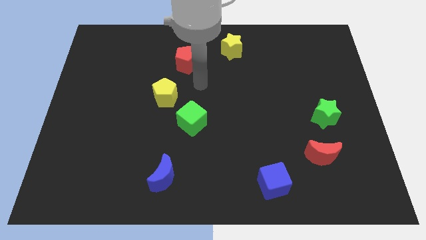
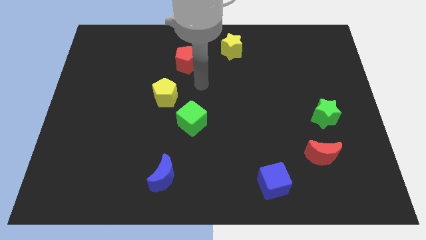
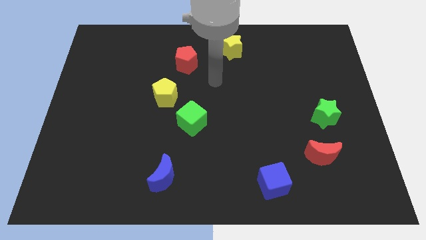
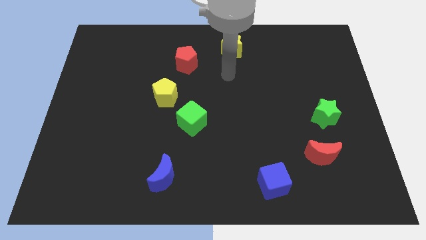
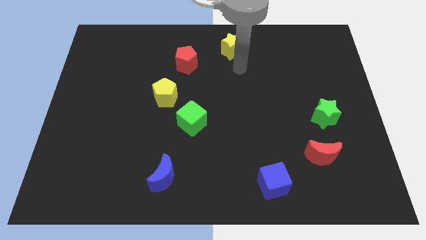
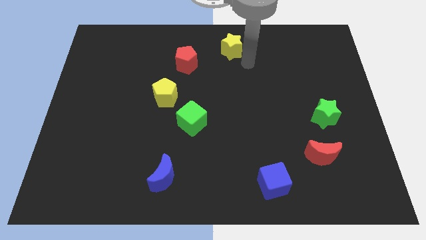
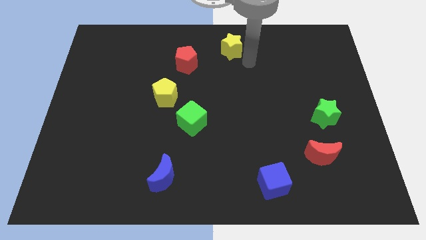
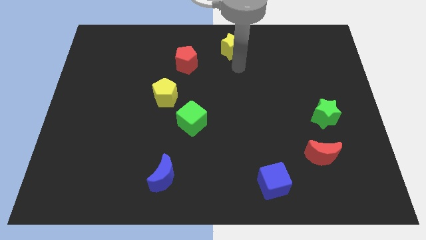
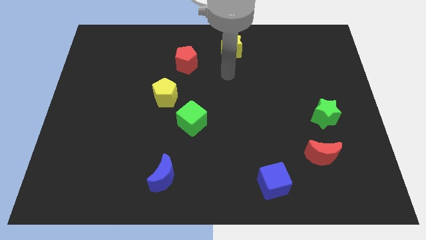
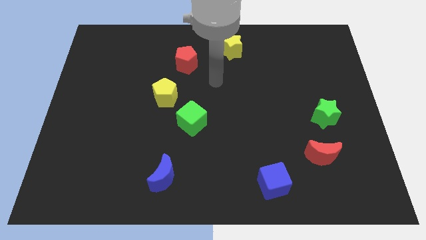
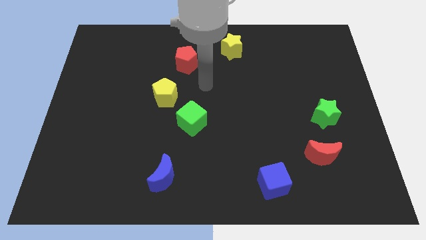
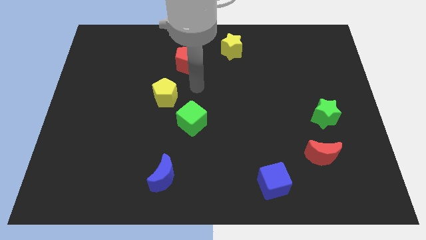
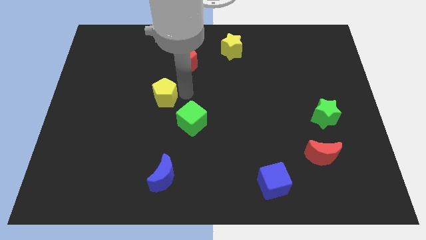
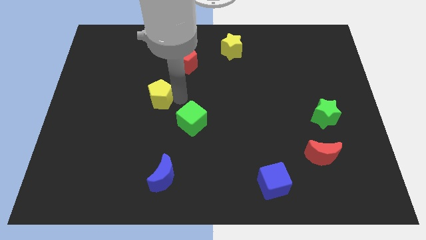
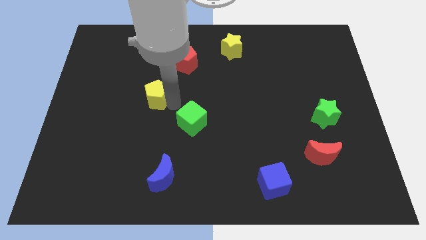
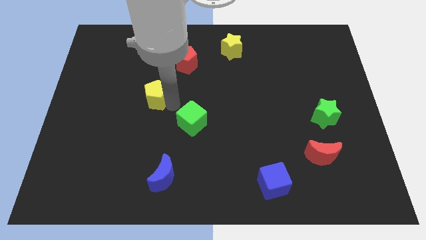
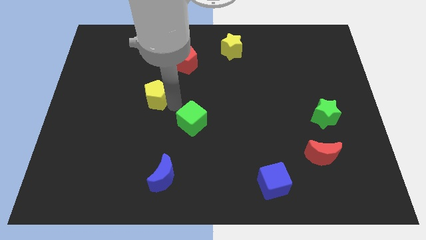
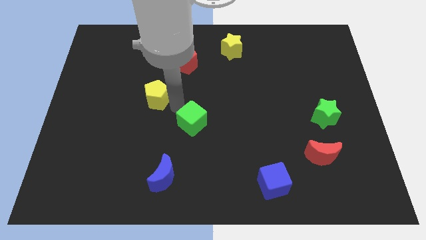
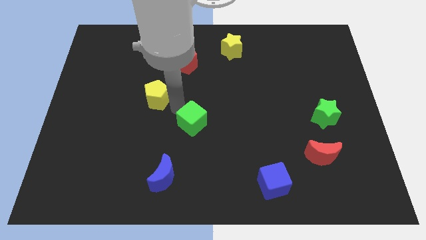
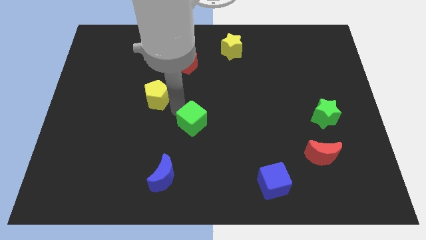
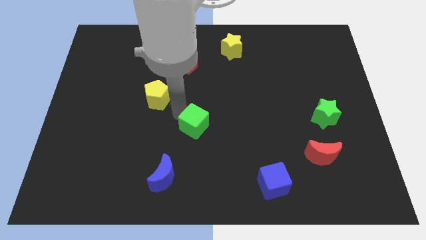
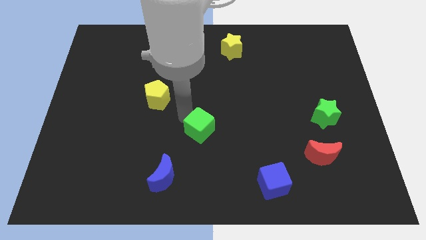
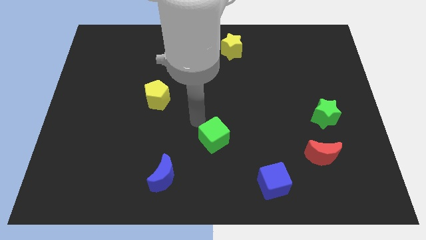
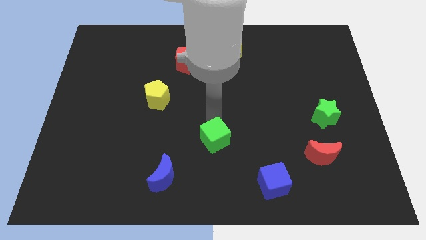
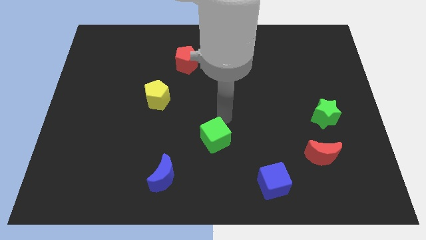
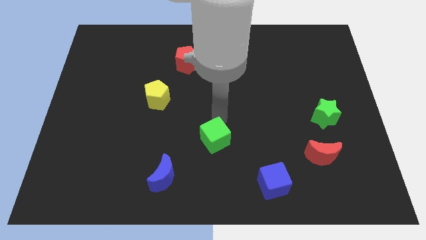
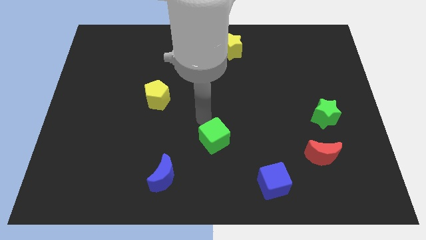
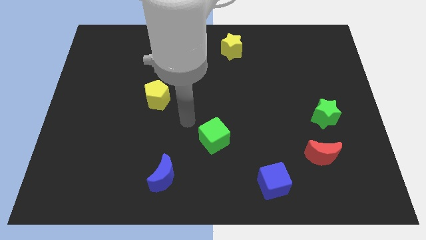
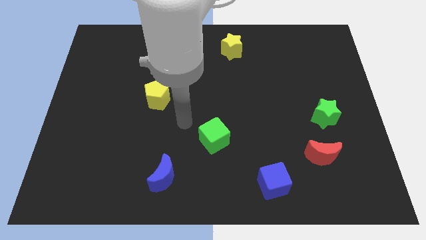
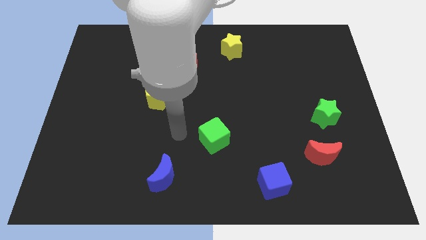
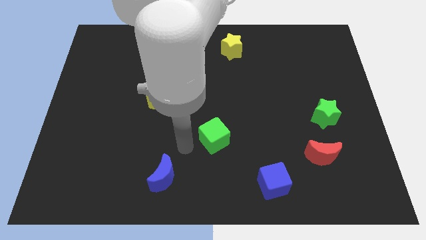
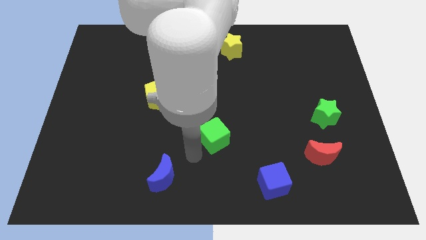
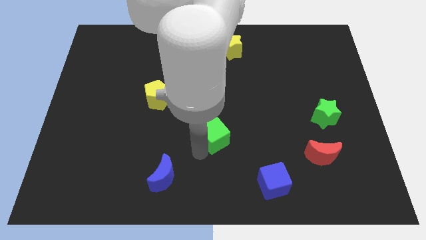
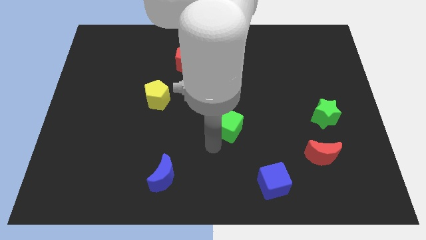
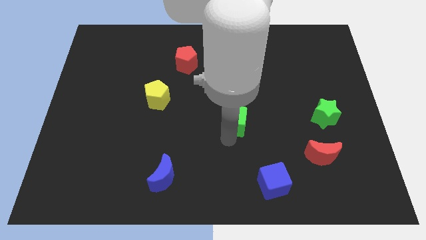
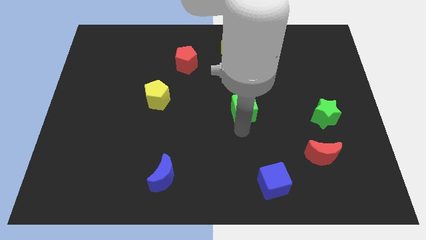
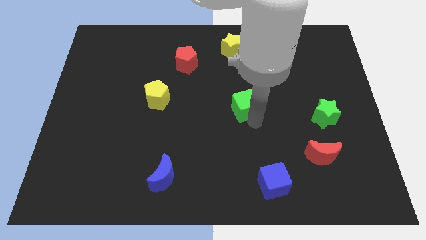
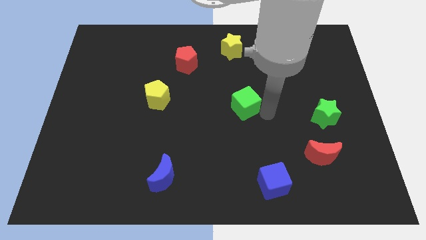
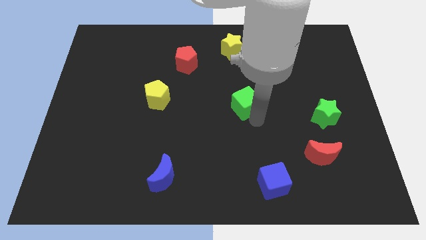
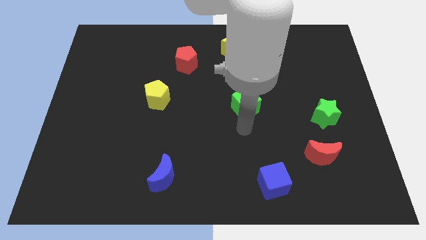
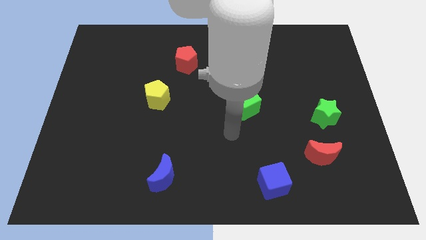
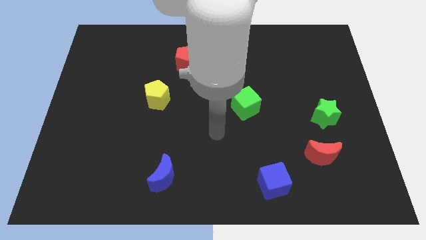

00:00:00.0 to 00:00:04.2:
place the green cube at the center of the board

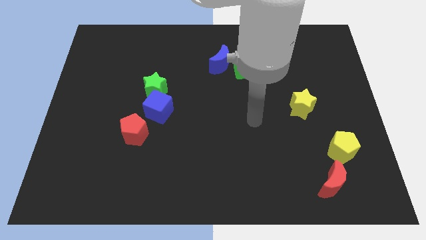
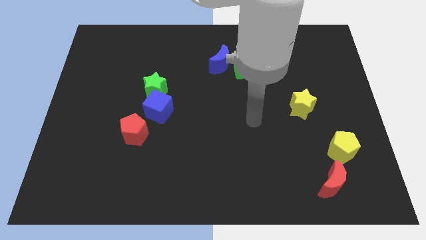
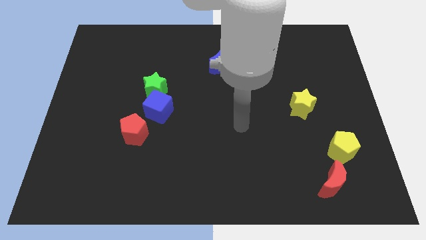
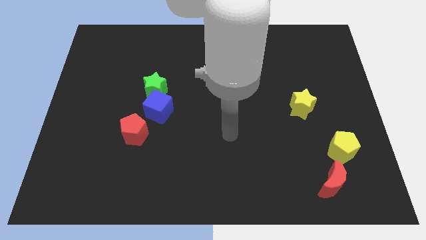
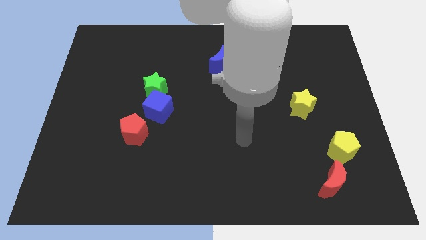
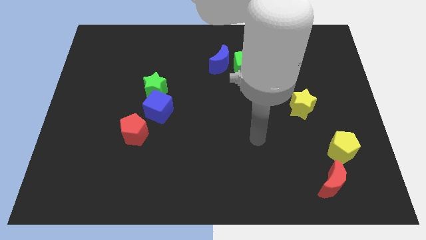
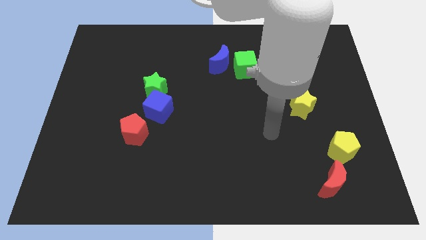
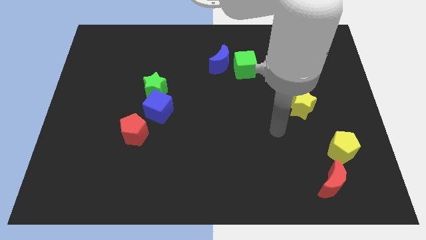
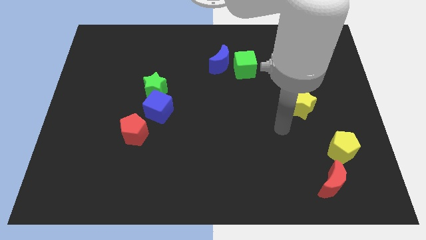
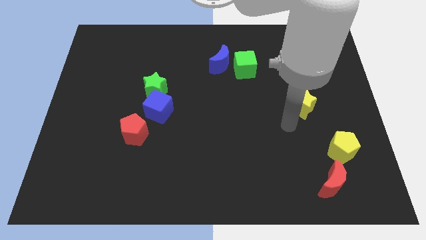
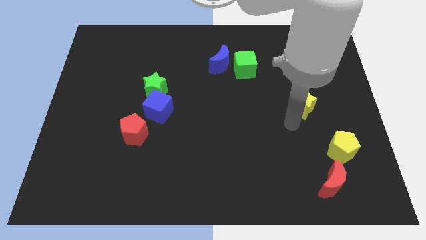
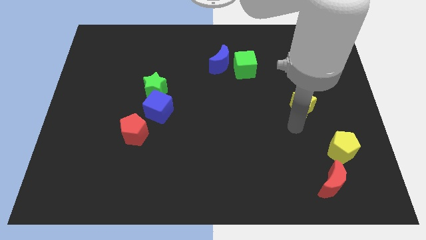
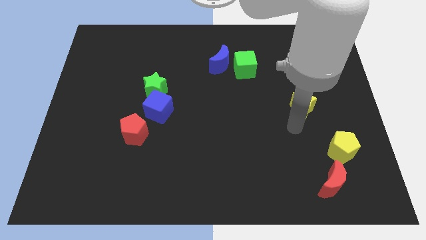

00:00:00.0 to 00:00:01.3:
place your arm vertically below the yellow star

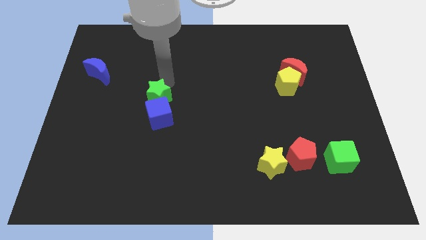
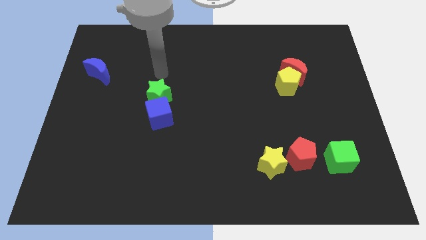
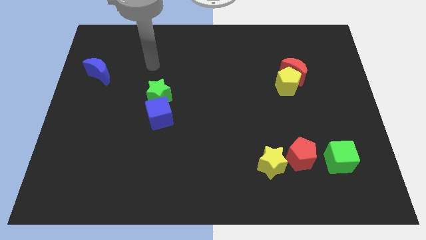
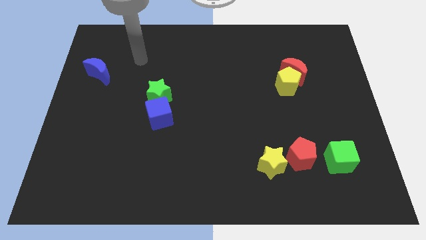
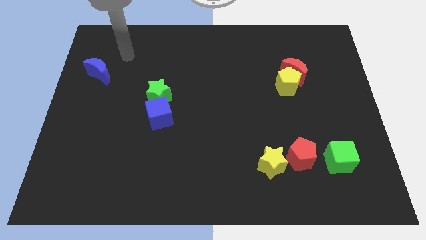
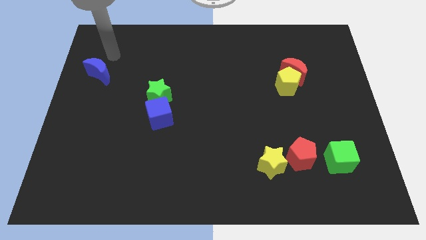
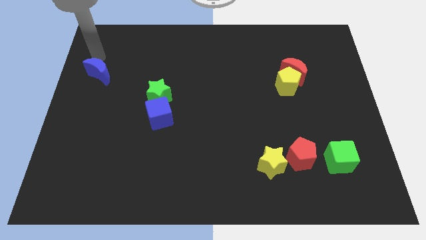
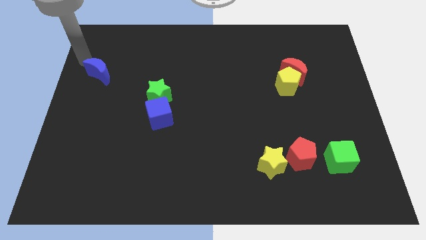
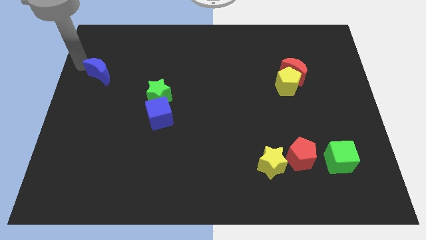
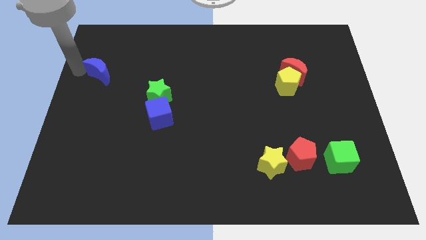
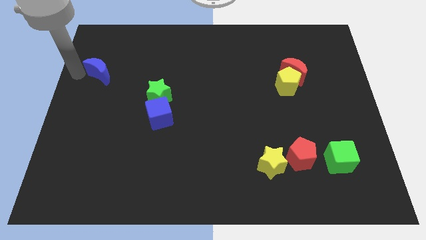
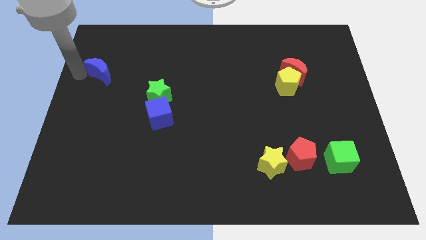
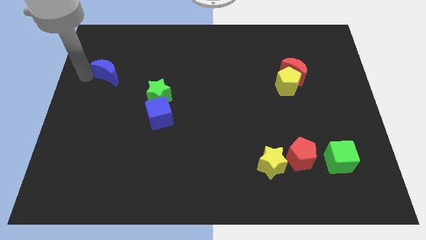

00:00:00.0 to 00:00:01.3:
move the arm to the left of the blue moon

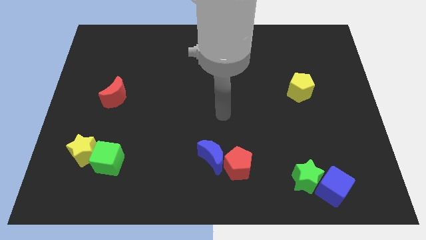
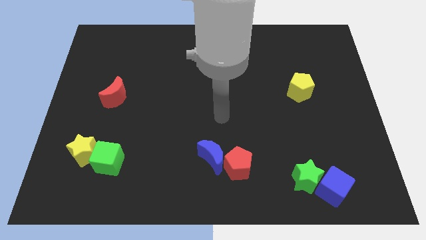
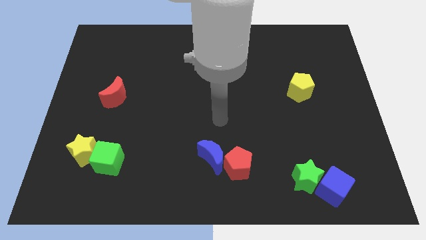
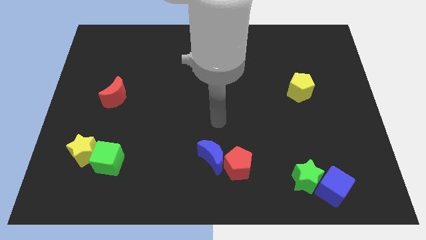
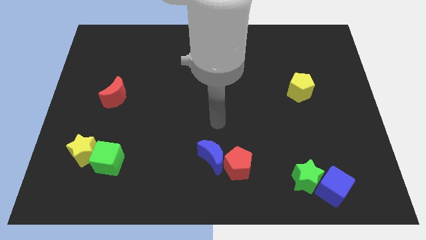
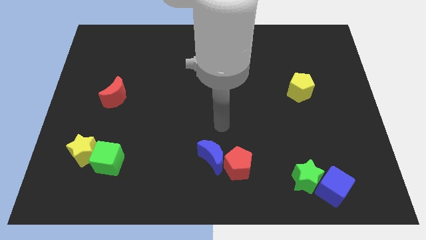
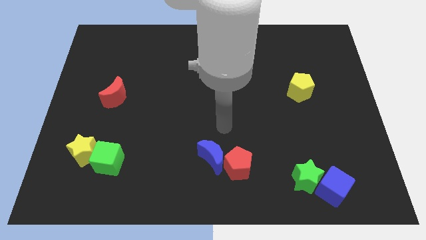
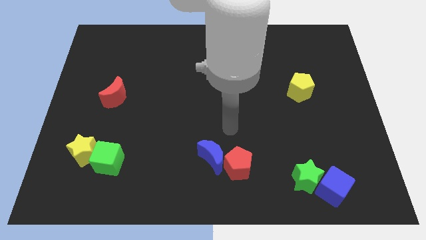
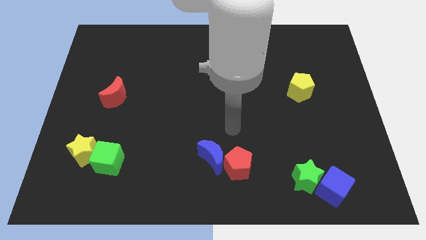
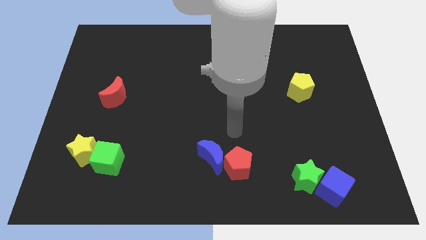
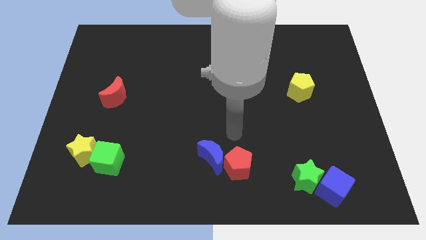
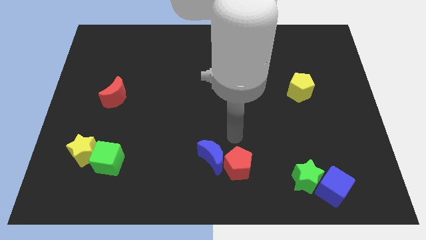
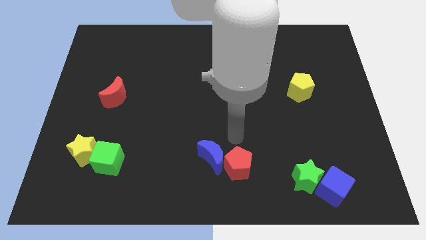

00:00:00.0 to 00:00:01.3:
place your arm at the top of red pentagon

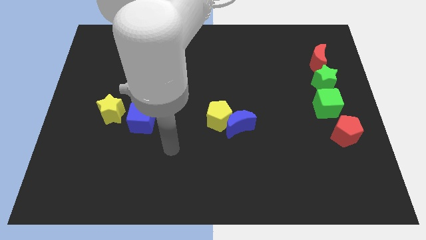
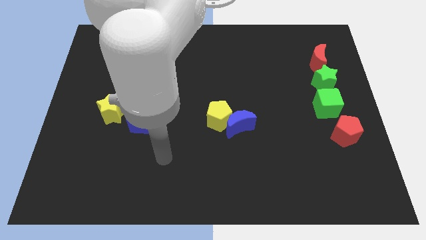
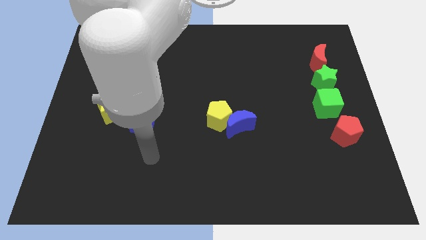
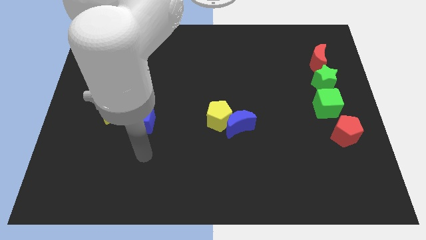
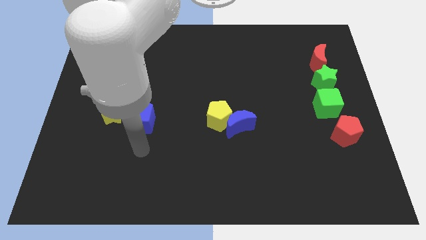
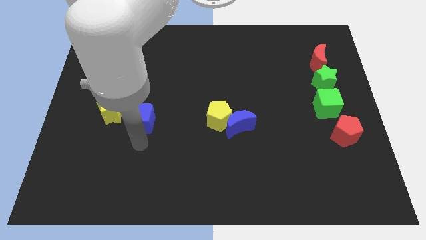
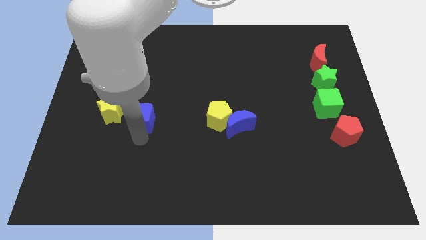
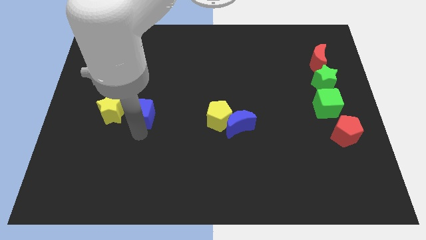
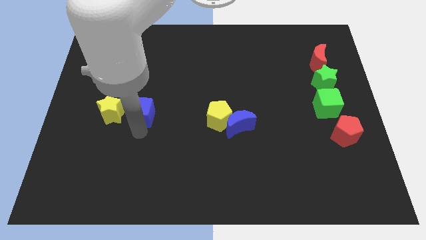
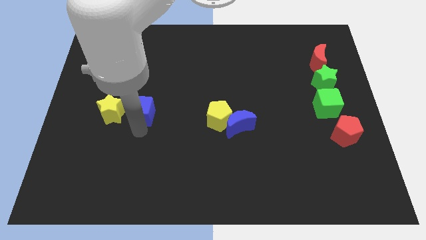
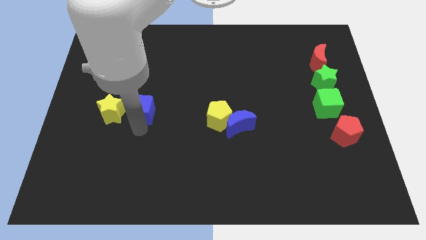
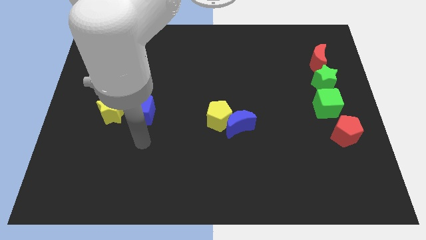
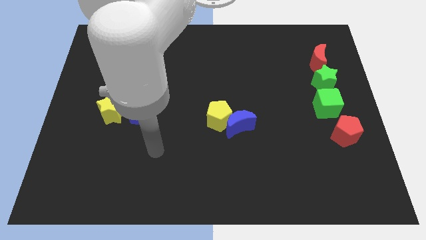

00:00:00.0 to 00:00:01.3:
put the blue moon right of the yellow star
